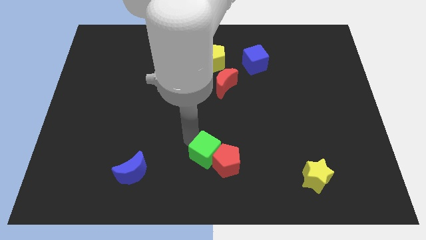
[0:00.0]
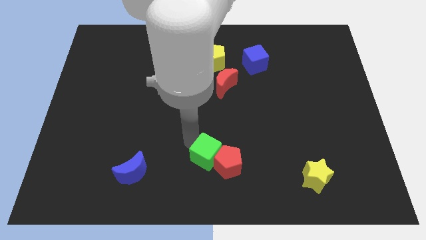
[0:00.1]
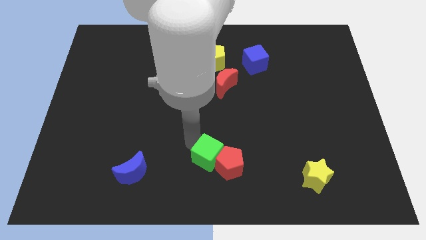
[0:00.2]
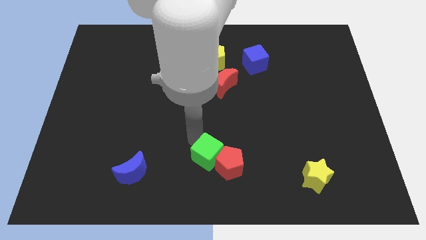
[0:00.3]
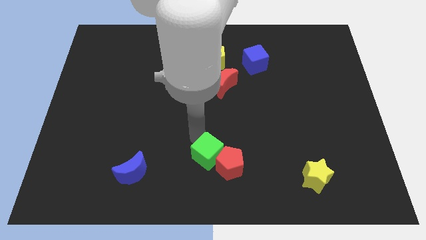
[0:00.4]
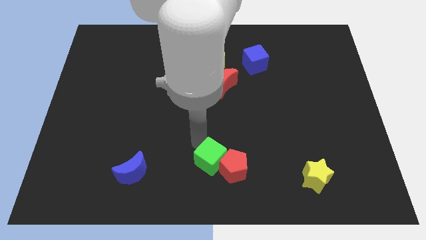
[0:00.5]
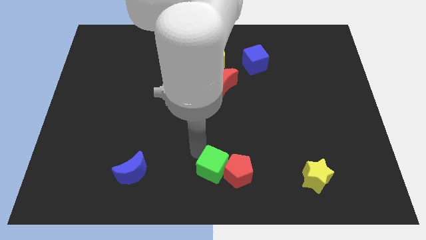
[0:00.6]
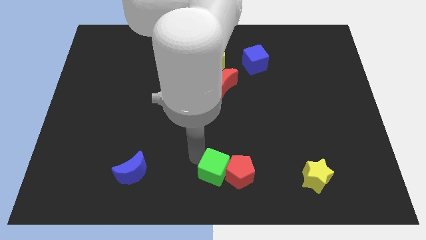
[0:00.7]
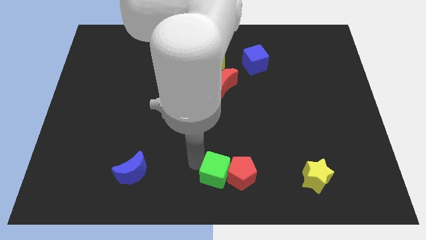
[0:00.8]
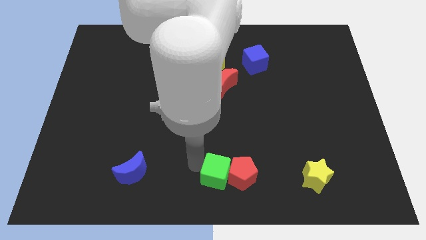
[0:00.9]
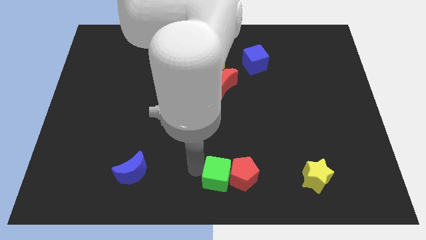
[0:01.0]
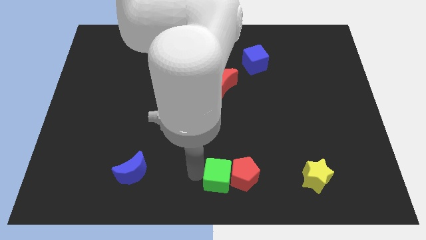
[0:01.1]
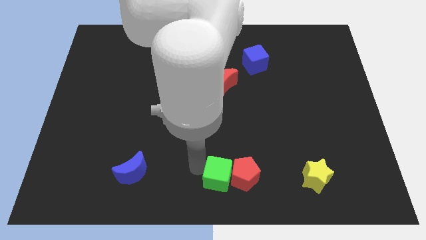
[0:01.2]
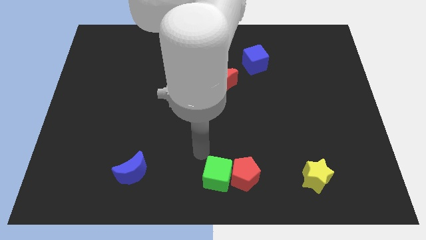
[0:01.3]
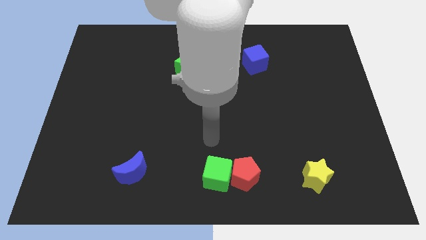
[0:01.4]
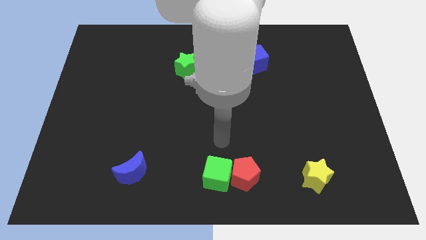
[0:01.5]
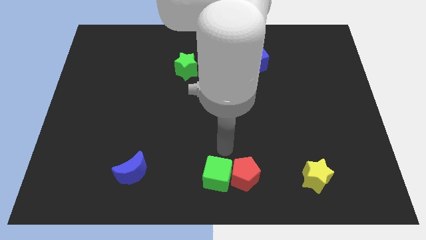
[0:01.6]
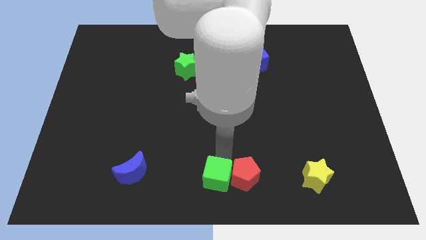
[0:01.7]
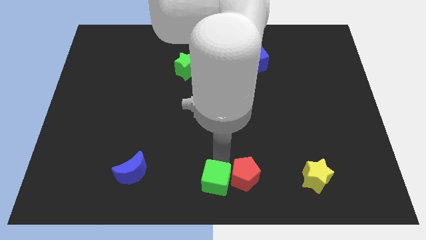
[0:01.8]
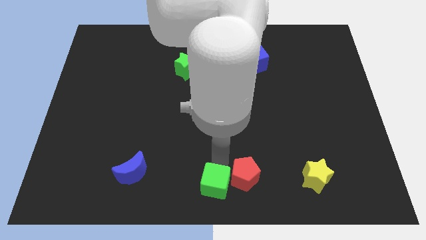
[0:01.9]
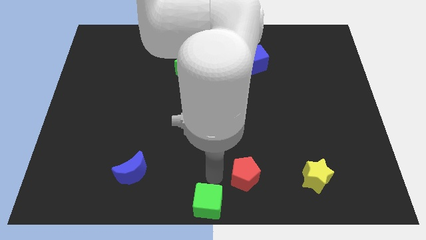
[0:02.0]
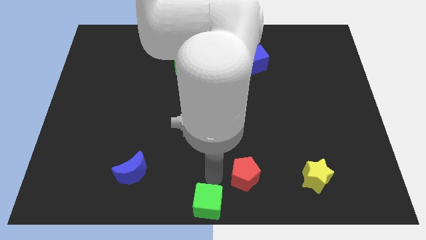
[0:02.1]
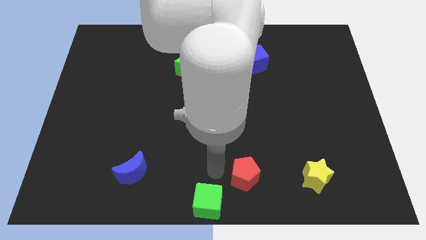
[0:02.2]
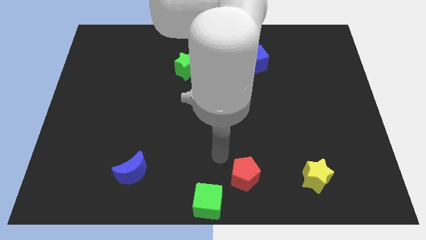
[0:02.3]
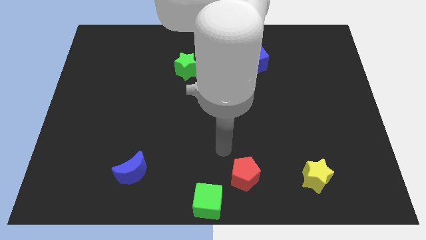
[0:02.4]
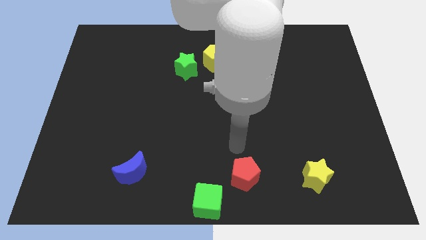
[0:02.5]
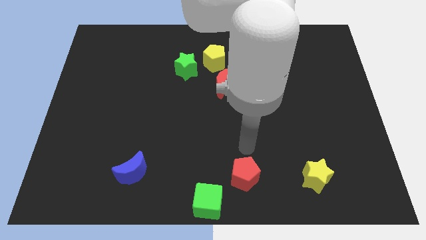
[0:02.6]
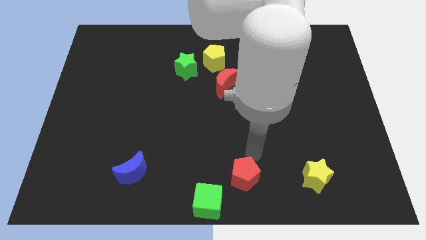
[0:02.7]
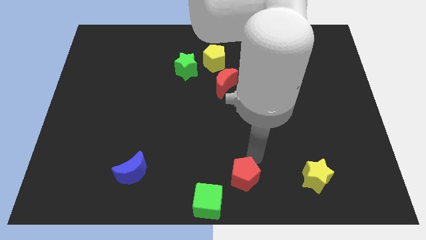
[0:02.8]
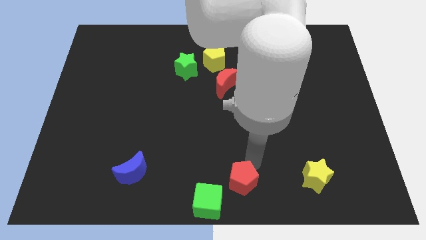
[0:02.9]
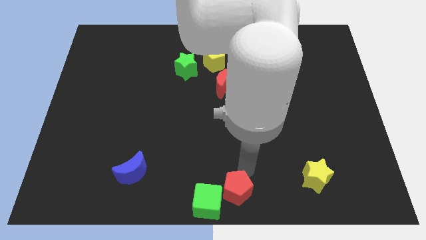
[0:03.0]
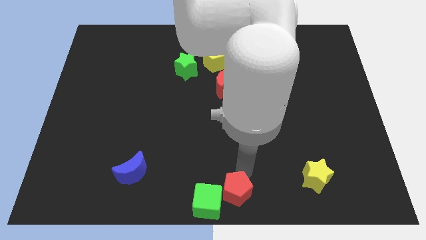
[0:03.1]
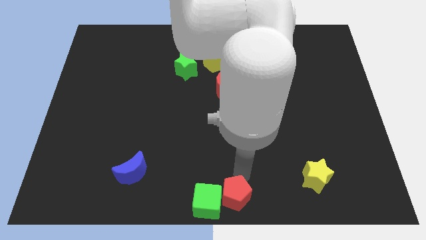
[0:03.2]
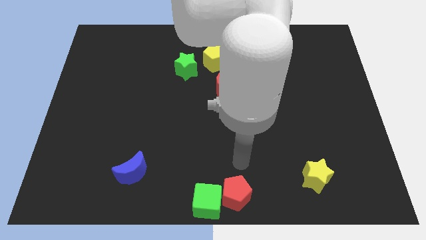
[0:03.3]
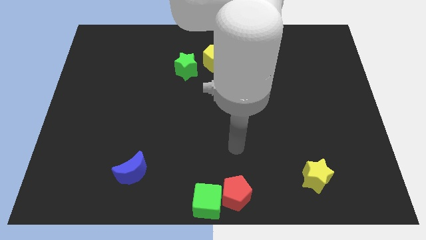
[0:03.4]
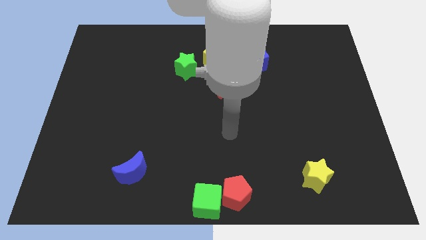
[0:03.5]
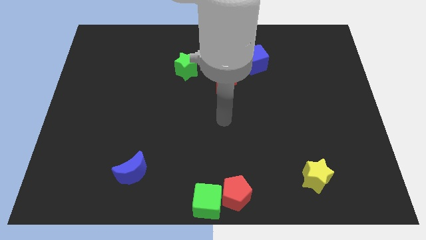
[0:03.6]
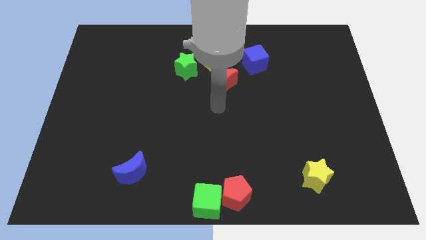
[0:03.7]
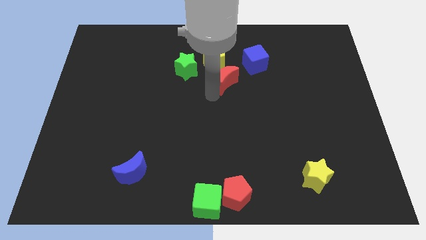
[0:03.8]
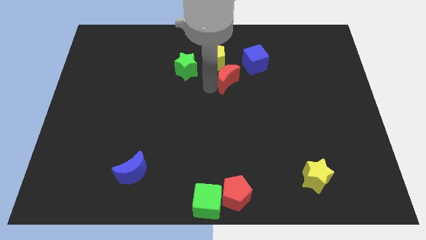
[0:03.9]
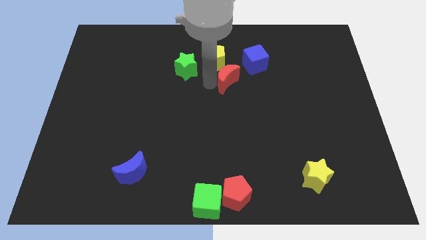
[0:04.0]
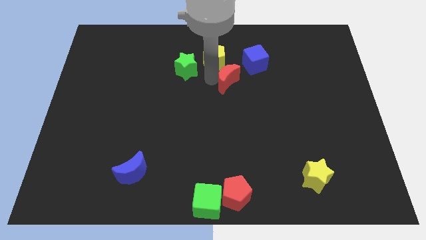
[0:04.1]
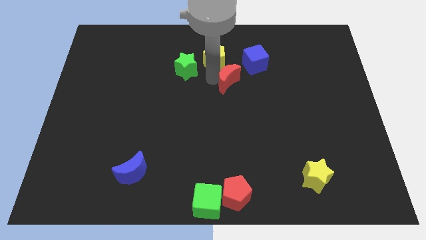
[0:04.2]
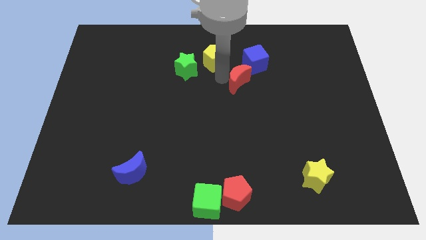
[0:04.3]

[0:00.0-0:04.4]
adjust the green cube to the left side of red pentagon

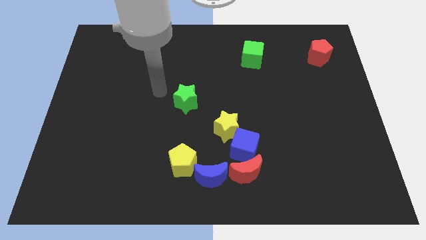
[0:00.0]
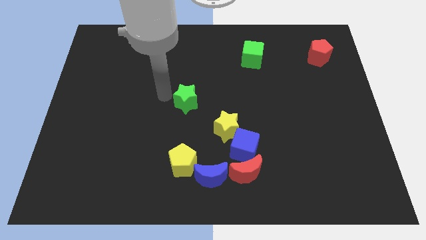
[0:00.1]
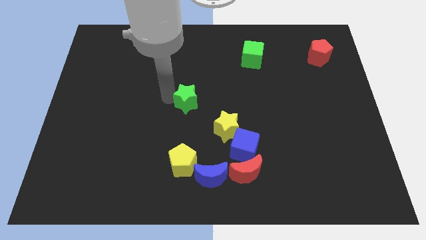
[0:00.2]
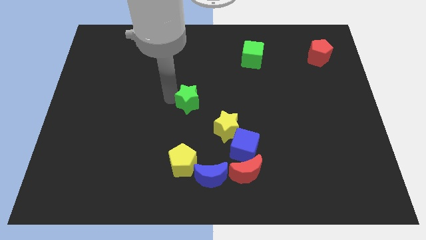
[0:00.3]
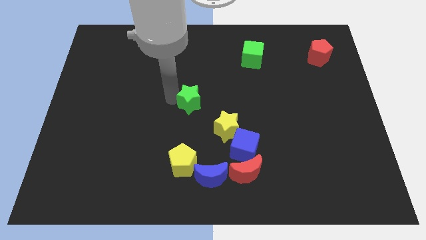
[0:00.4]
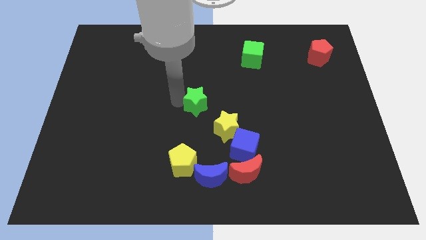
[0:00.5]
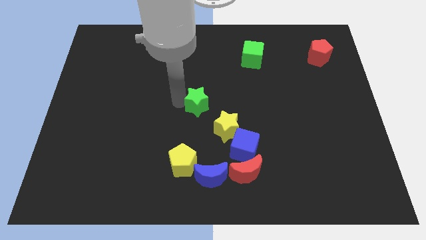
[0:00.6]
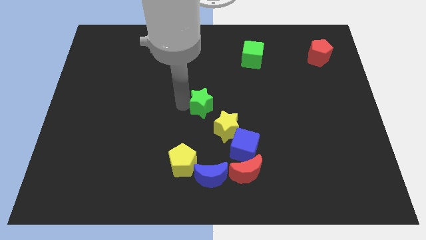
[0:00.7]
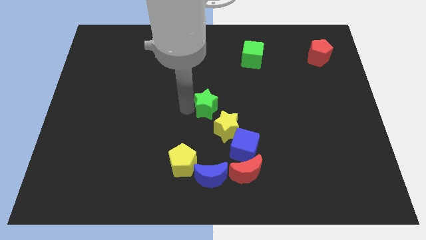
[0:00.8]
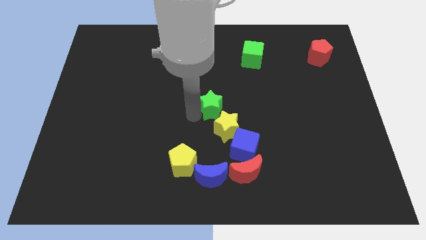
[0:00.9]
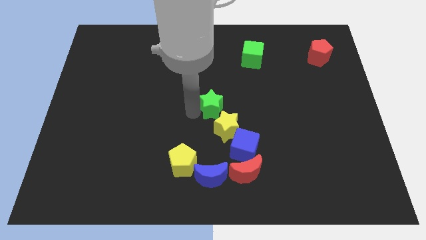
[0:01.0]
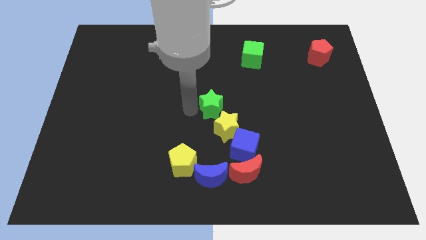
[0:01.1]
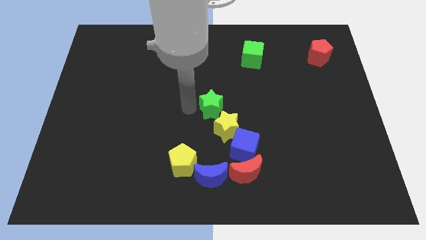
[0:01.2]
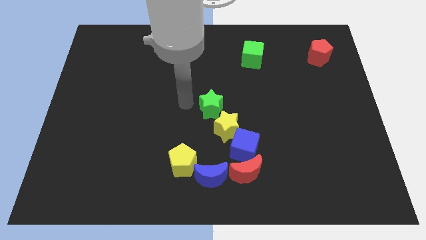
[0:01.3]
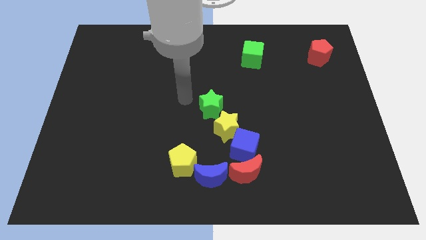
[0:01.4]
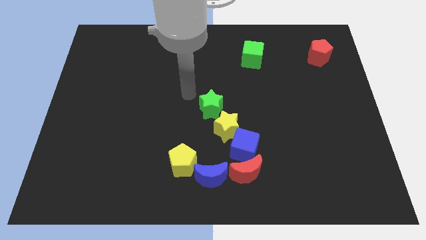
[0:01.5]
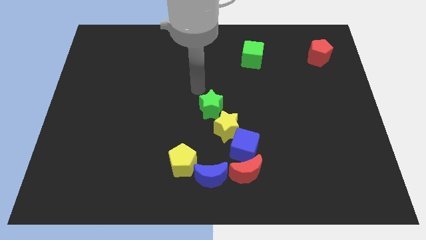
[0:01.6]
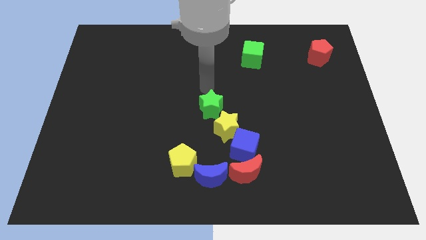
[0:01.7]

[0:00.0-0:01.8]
move the green star to the top left of the yellow star

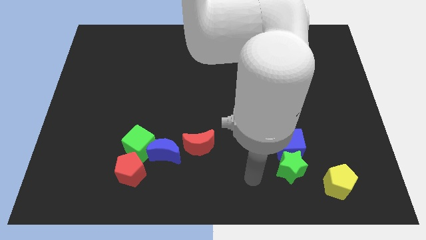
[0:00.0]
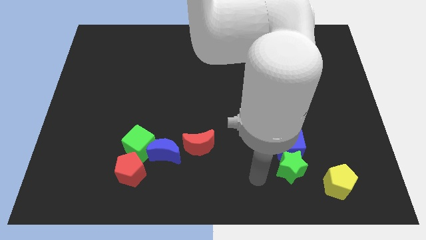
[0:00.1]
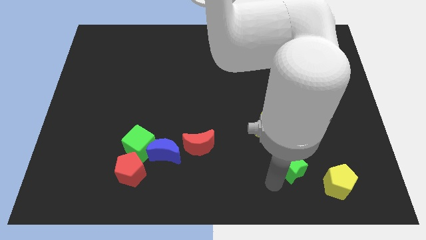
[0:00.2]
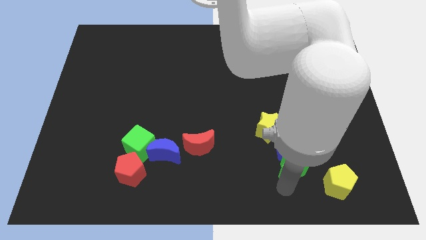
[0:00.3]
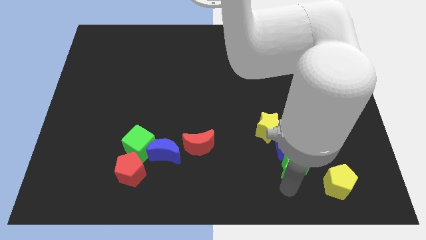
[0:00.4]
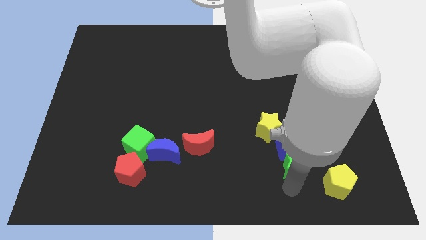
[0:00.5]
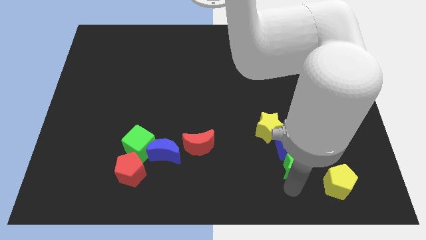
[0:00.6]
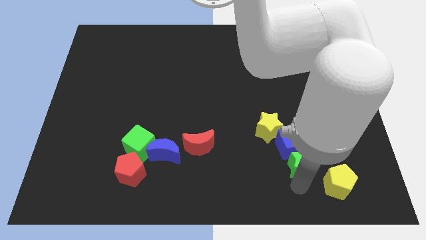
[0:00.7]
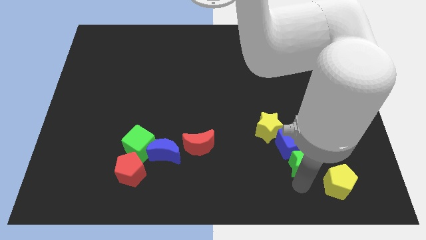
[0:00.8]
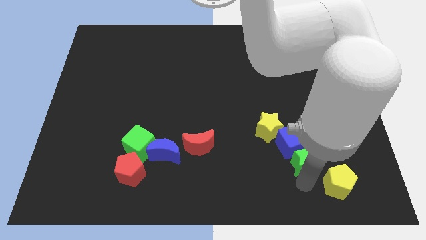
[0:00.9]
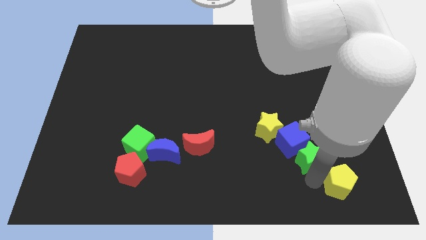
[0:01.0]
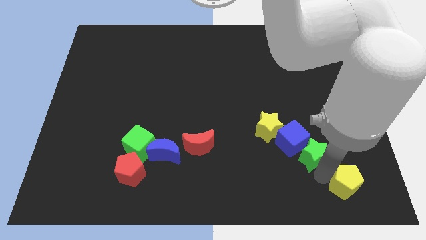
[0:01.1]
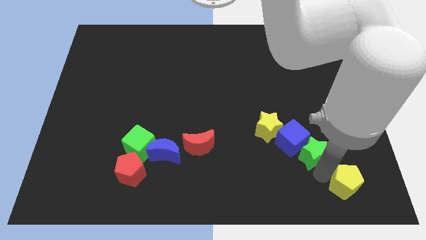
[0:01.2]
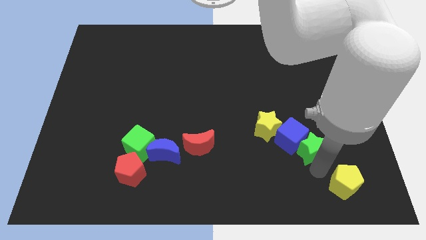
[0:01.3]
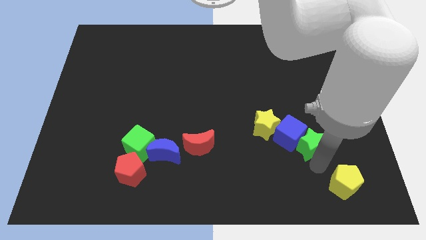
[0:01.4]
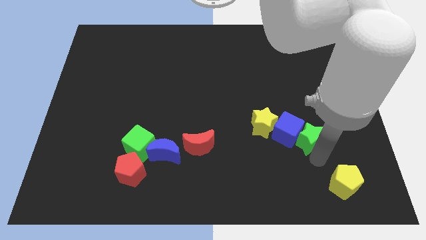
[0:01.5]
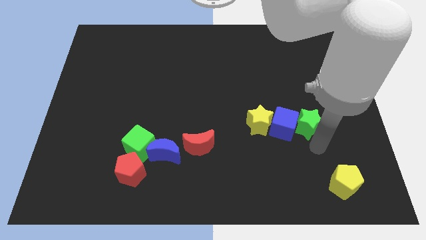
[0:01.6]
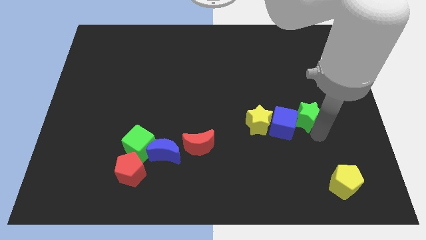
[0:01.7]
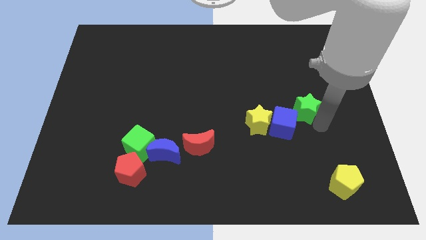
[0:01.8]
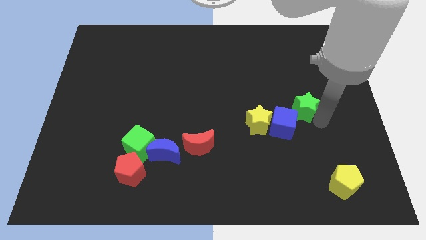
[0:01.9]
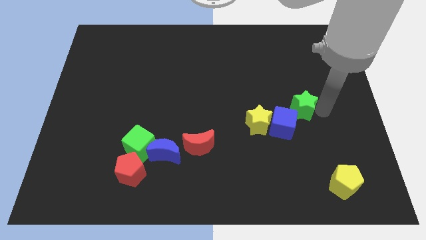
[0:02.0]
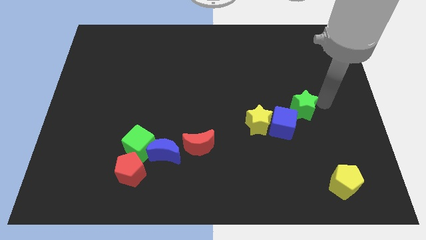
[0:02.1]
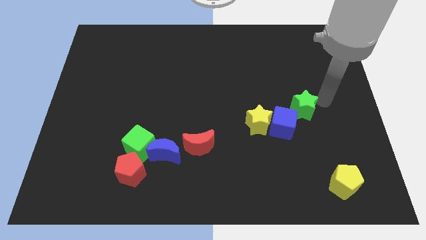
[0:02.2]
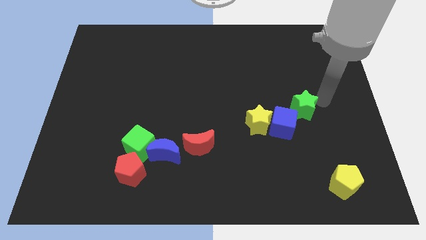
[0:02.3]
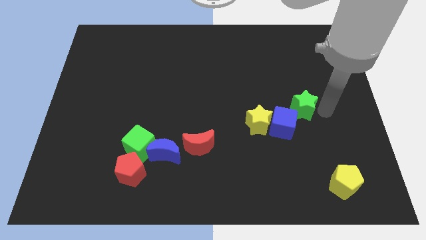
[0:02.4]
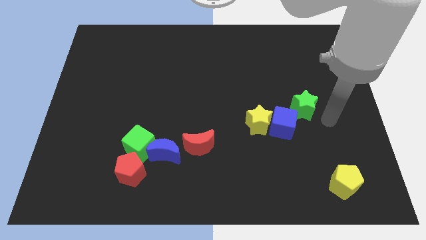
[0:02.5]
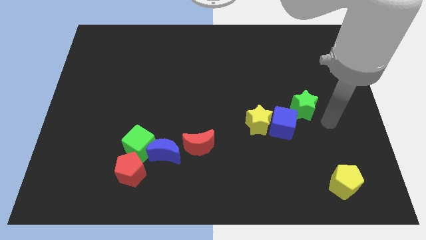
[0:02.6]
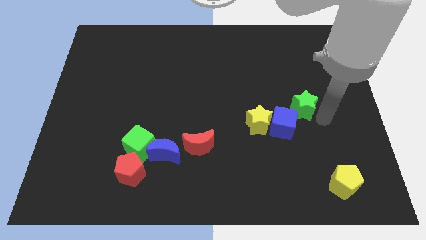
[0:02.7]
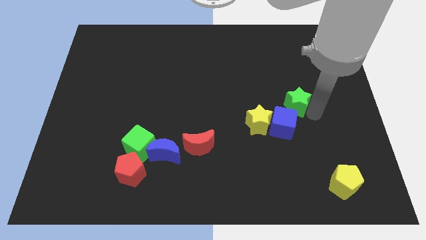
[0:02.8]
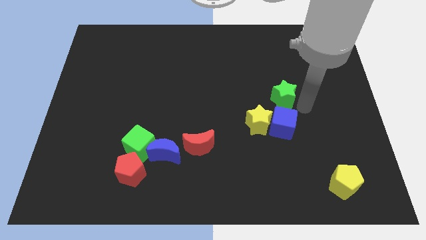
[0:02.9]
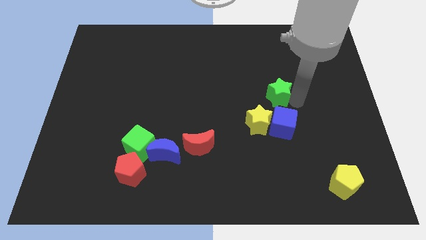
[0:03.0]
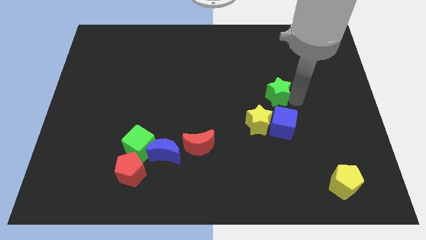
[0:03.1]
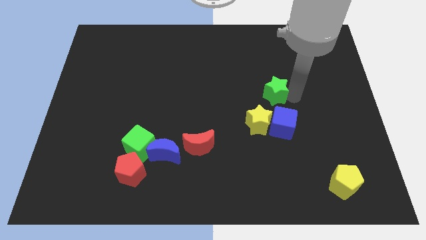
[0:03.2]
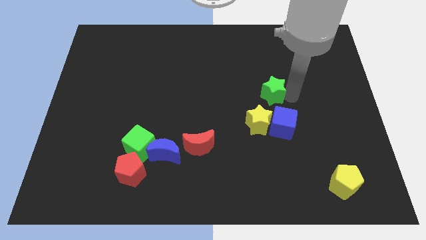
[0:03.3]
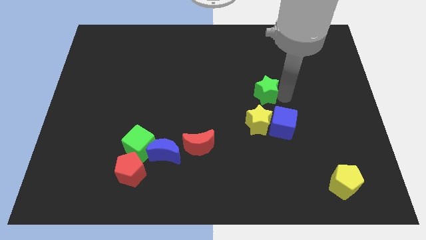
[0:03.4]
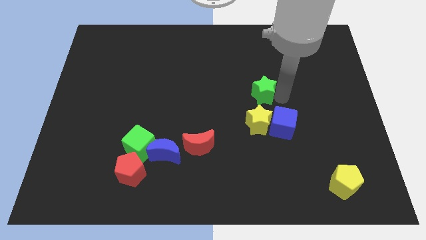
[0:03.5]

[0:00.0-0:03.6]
place green star to the top of yellow star
